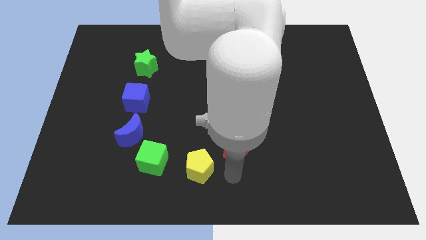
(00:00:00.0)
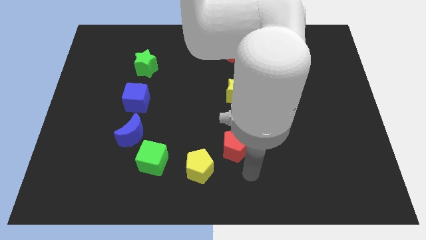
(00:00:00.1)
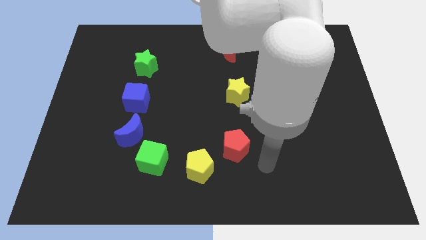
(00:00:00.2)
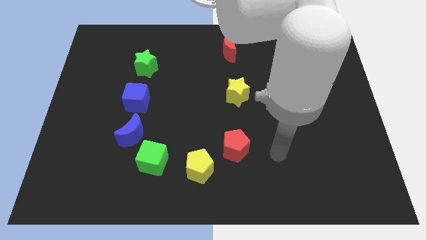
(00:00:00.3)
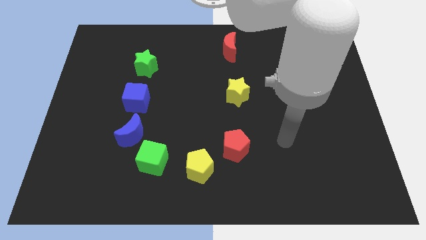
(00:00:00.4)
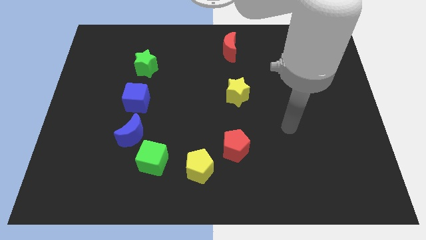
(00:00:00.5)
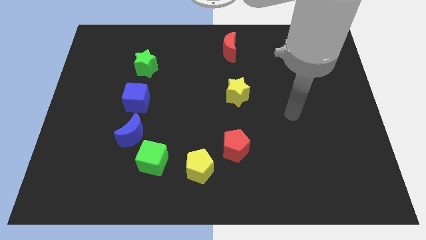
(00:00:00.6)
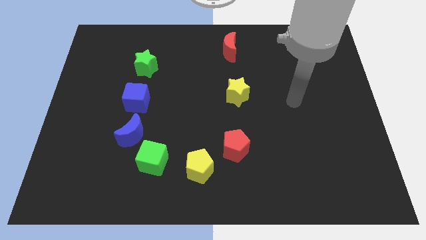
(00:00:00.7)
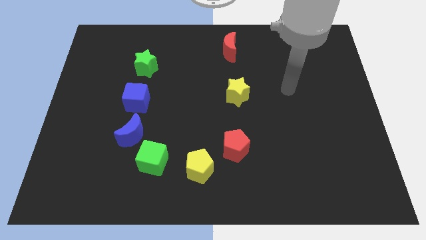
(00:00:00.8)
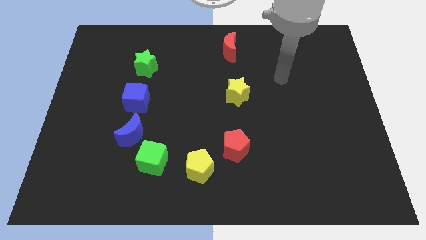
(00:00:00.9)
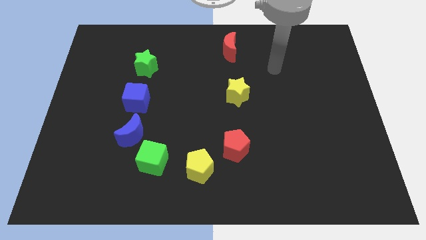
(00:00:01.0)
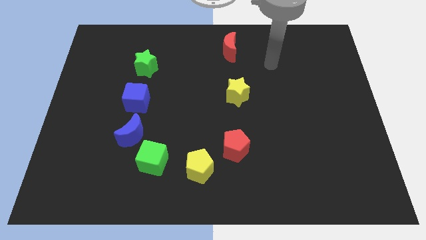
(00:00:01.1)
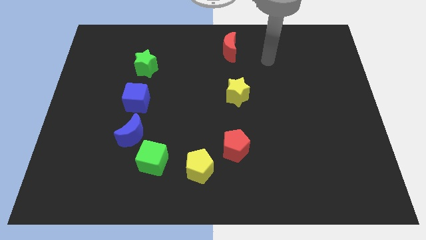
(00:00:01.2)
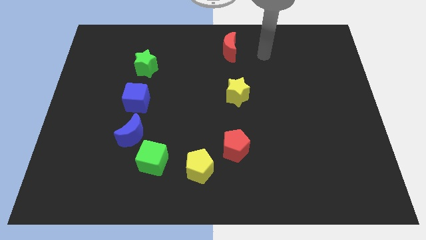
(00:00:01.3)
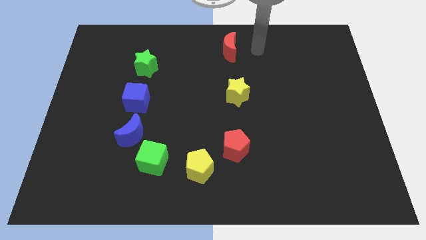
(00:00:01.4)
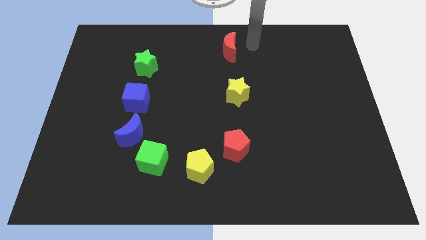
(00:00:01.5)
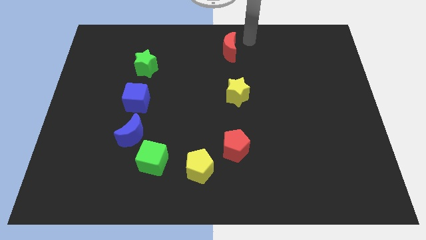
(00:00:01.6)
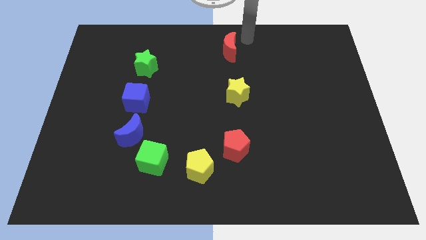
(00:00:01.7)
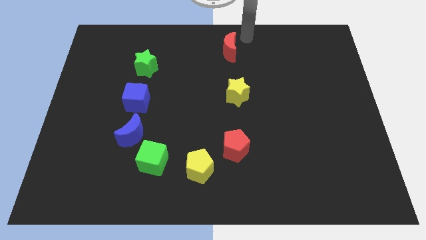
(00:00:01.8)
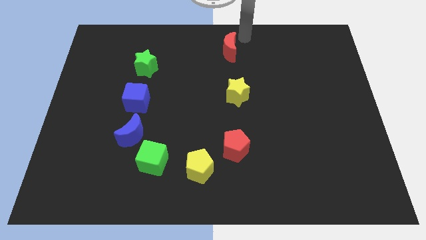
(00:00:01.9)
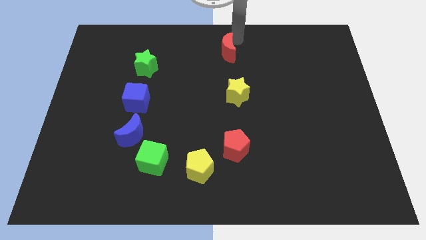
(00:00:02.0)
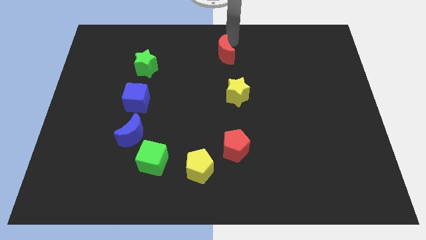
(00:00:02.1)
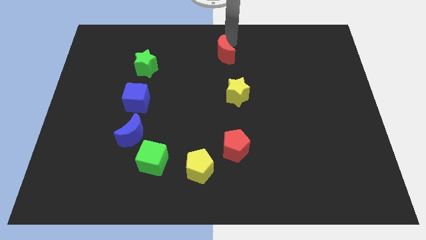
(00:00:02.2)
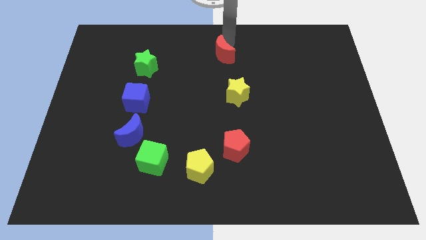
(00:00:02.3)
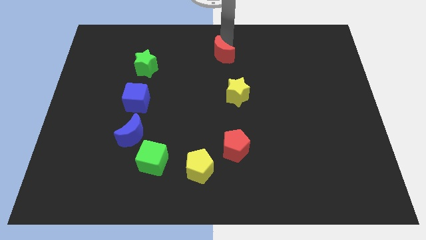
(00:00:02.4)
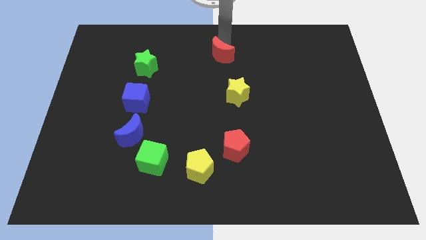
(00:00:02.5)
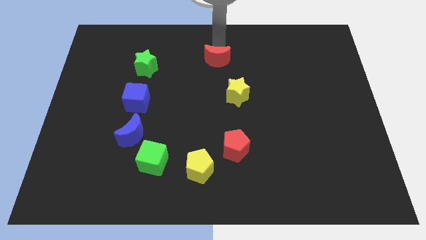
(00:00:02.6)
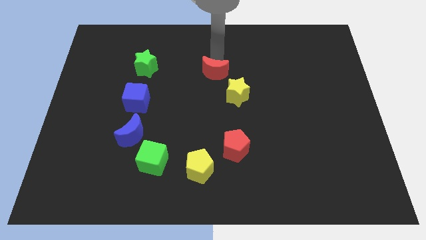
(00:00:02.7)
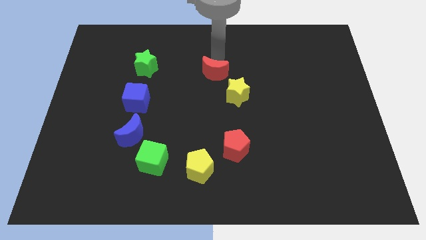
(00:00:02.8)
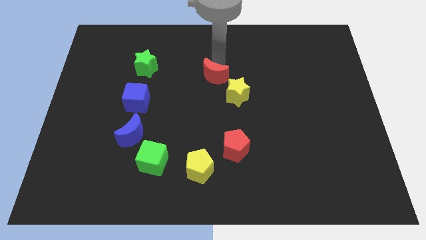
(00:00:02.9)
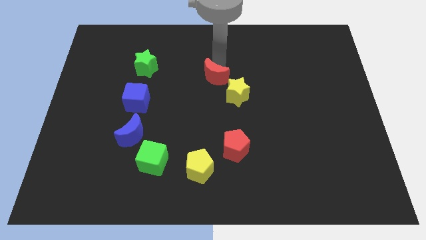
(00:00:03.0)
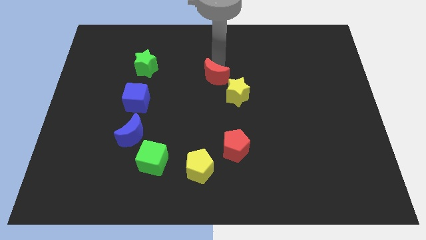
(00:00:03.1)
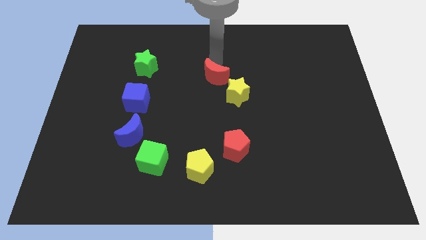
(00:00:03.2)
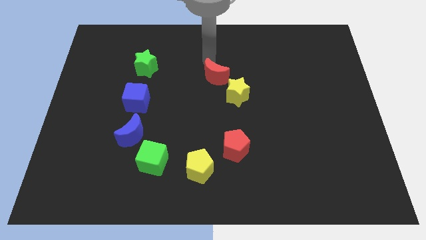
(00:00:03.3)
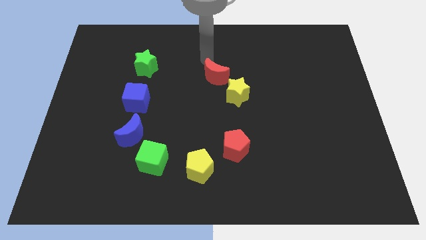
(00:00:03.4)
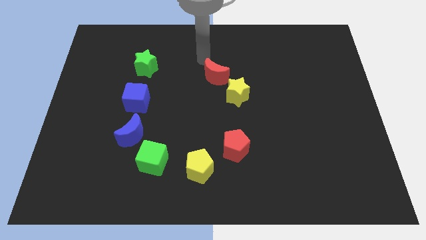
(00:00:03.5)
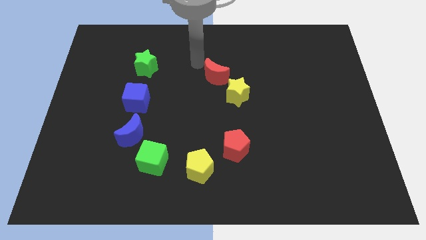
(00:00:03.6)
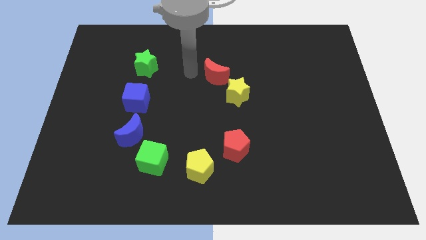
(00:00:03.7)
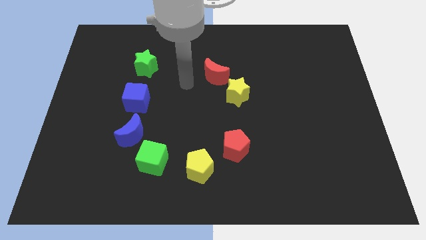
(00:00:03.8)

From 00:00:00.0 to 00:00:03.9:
push the red crescent to the top left of the yellow star

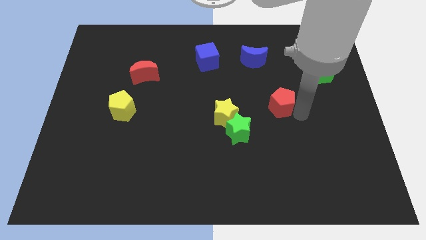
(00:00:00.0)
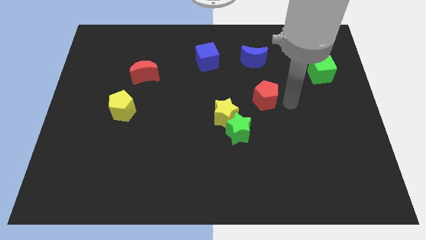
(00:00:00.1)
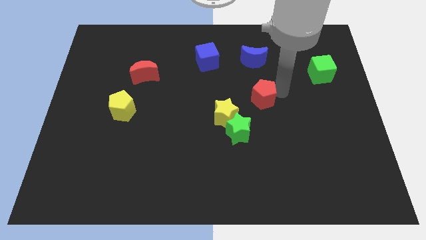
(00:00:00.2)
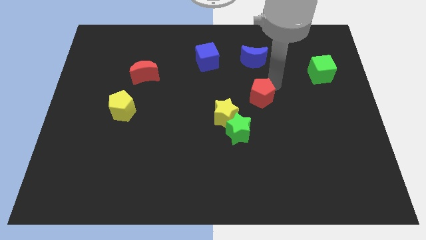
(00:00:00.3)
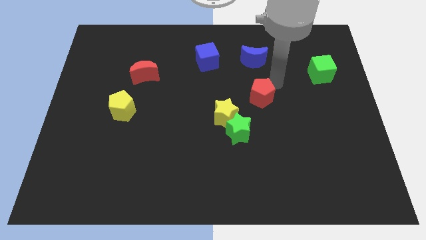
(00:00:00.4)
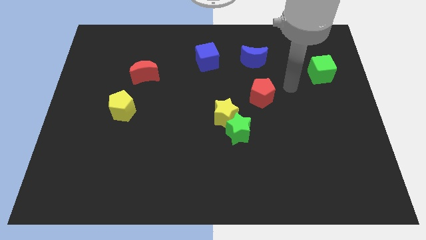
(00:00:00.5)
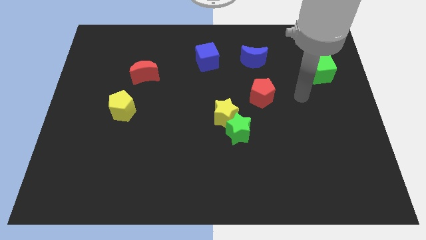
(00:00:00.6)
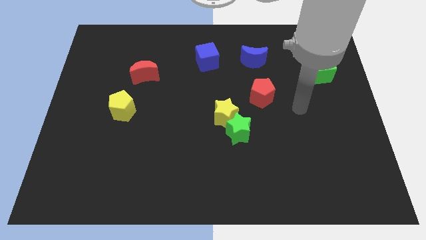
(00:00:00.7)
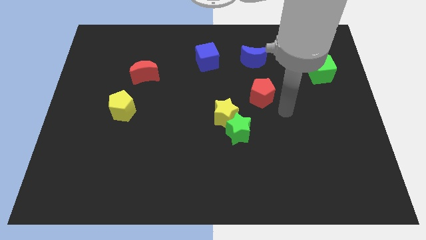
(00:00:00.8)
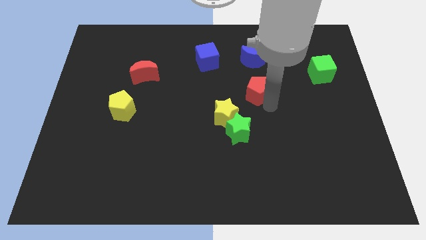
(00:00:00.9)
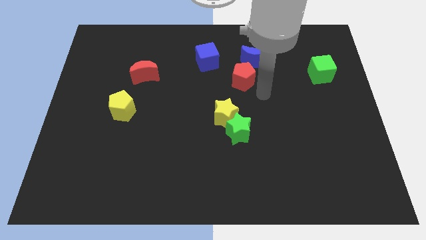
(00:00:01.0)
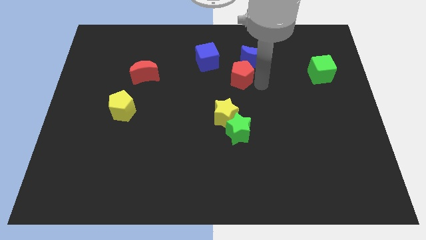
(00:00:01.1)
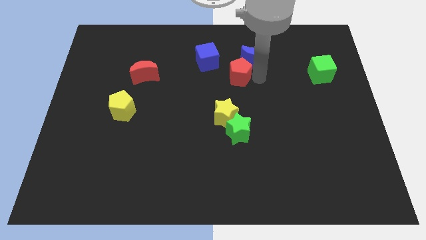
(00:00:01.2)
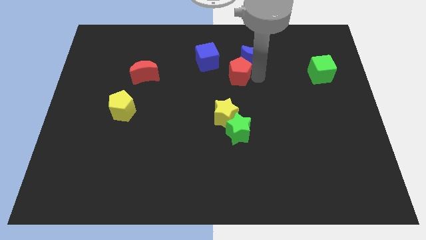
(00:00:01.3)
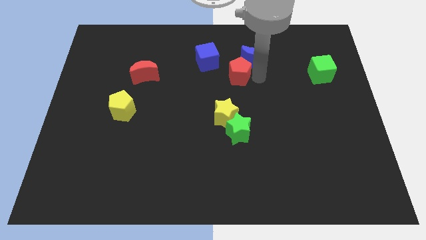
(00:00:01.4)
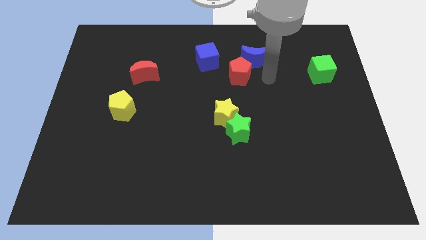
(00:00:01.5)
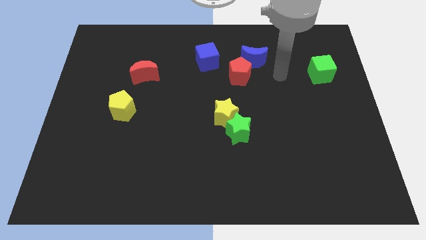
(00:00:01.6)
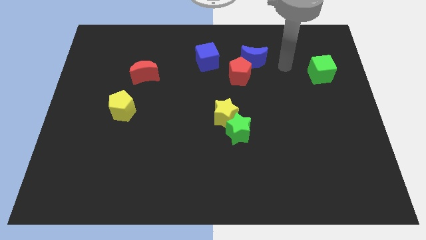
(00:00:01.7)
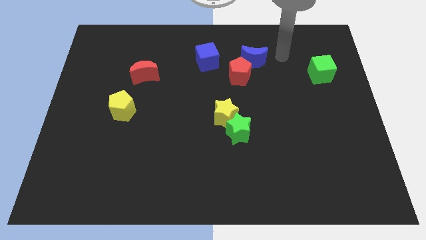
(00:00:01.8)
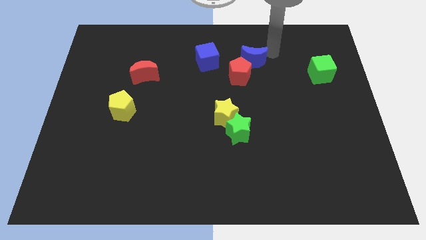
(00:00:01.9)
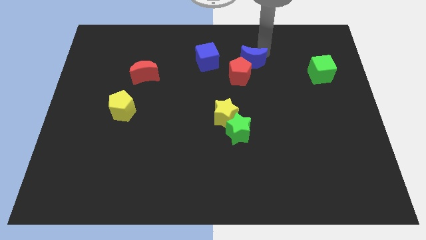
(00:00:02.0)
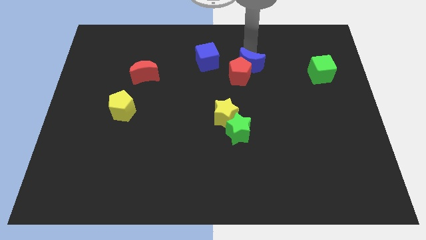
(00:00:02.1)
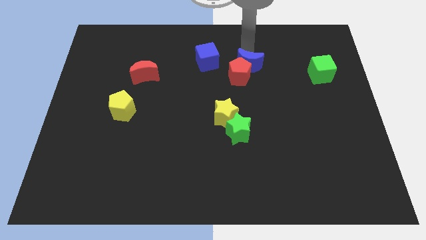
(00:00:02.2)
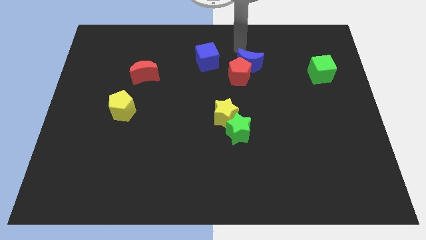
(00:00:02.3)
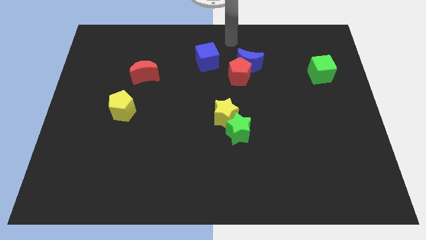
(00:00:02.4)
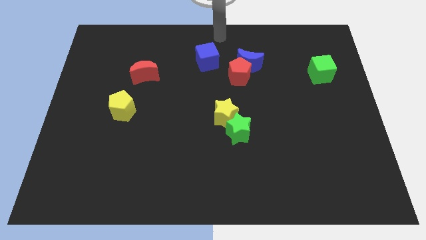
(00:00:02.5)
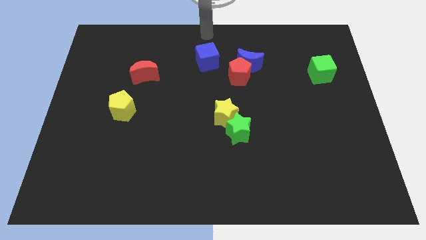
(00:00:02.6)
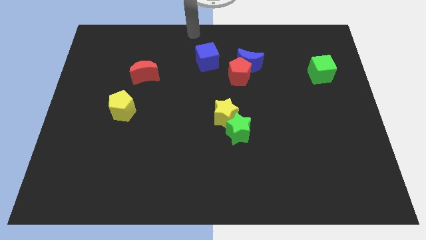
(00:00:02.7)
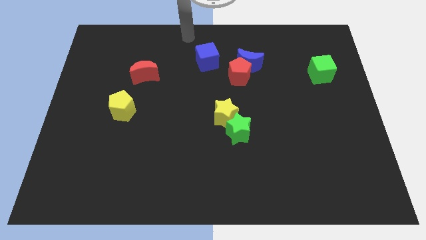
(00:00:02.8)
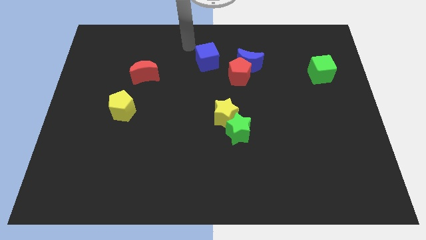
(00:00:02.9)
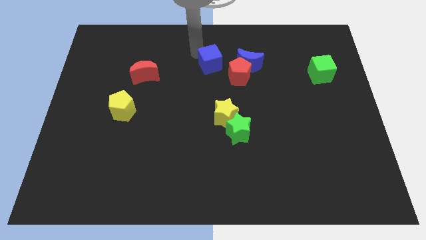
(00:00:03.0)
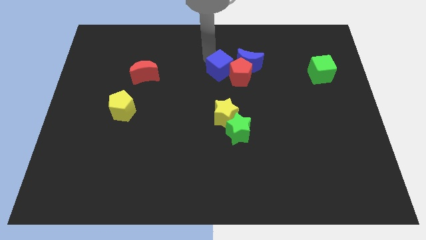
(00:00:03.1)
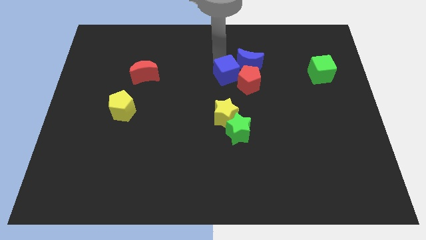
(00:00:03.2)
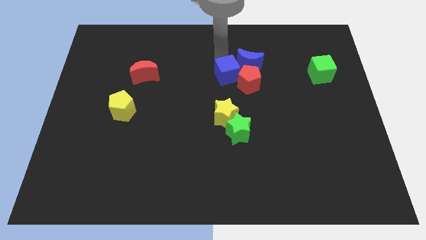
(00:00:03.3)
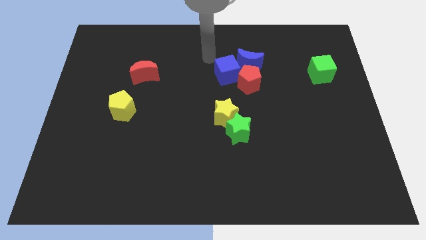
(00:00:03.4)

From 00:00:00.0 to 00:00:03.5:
group up the blue blocks with the red pentagon

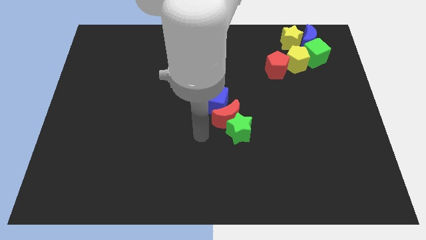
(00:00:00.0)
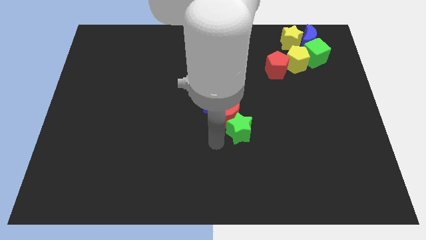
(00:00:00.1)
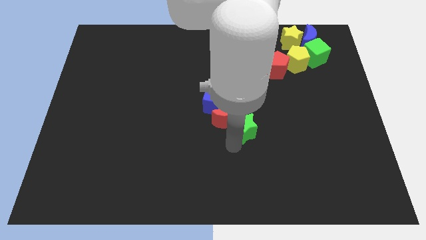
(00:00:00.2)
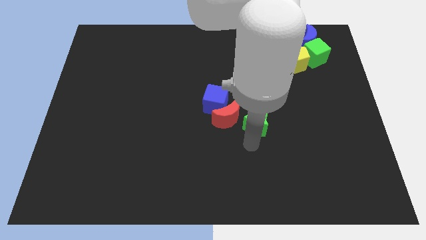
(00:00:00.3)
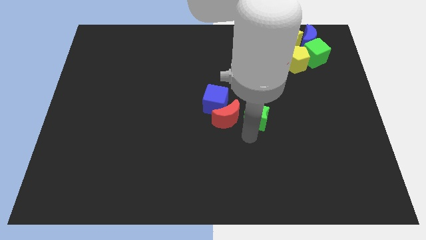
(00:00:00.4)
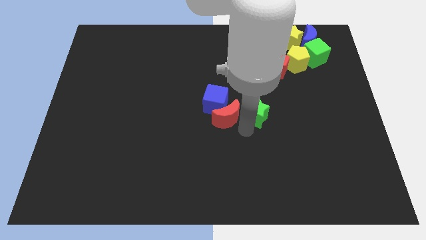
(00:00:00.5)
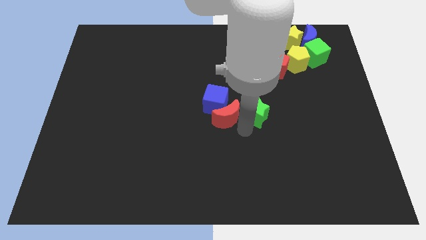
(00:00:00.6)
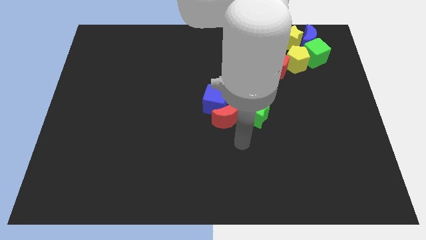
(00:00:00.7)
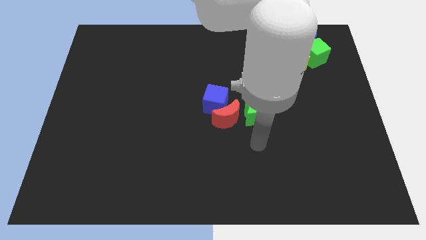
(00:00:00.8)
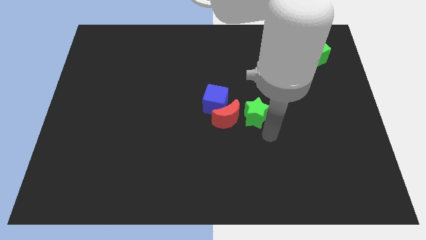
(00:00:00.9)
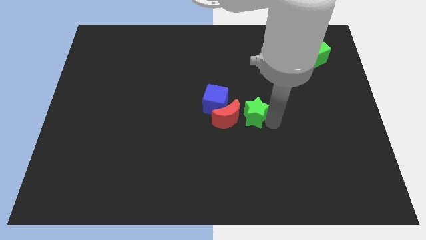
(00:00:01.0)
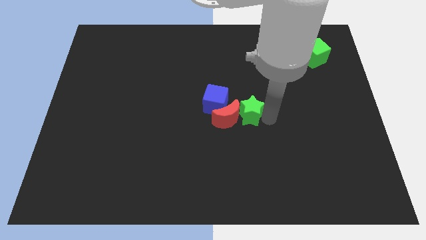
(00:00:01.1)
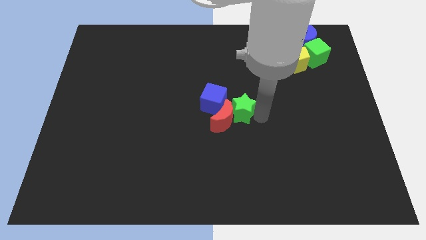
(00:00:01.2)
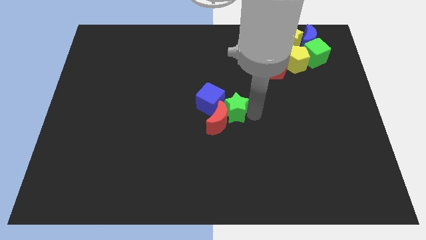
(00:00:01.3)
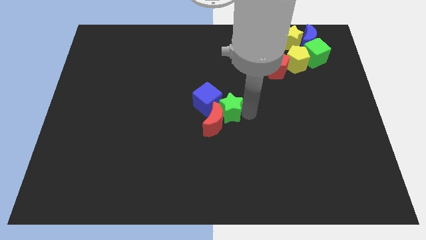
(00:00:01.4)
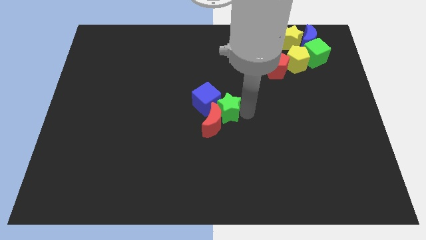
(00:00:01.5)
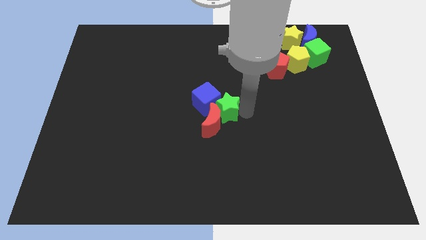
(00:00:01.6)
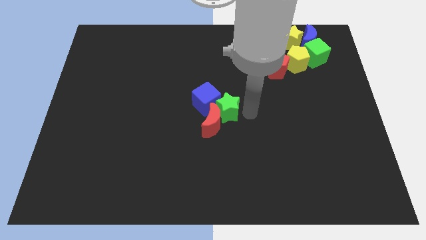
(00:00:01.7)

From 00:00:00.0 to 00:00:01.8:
push the green star into the blue cube
